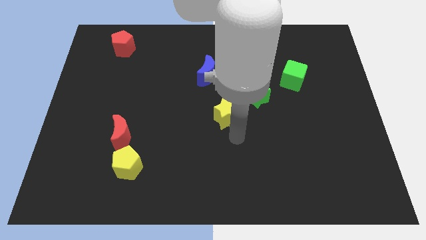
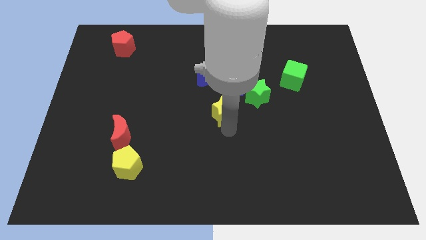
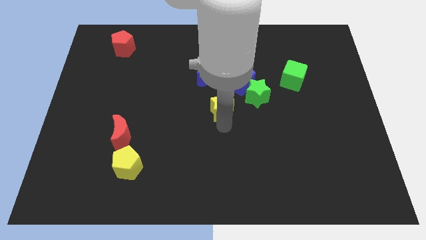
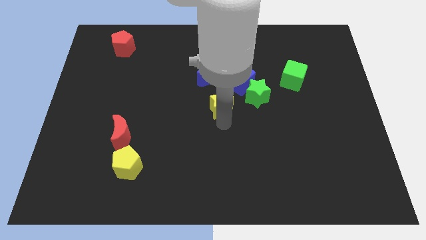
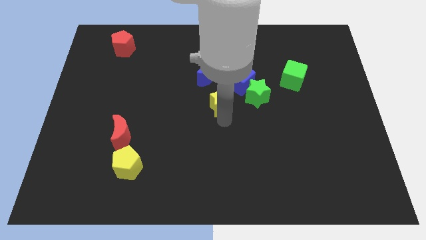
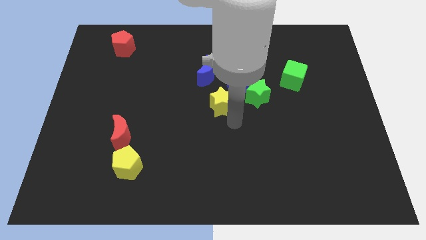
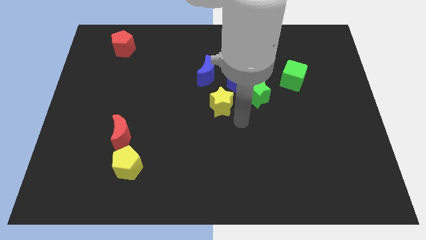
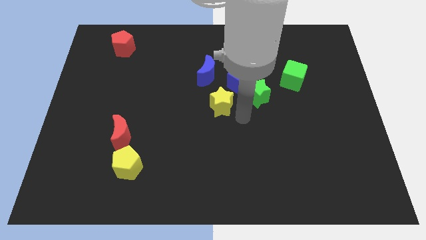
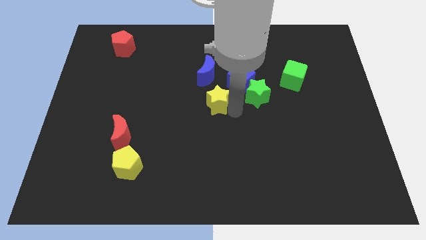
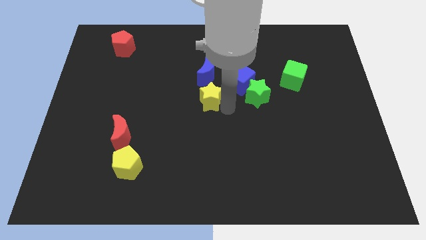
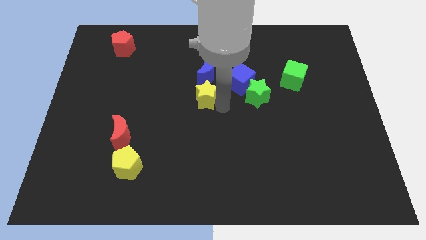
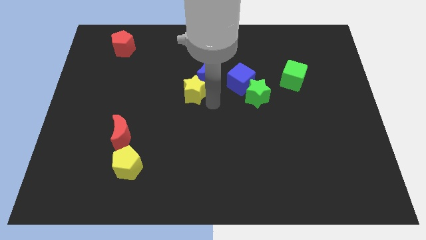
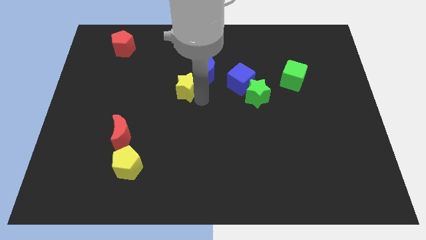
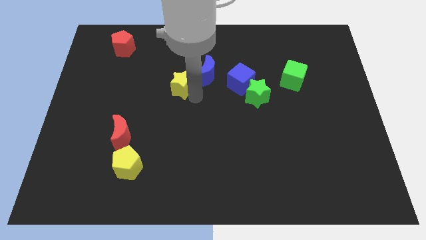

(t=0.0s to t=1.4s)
place the yellow star left to the blue moon

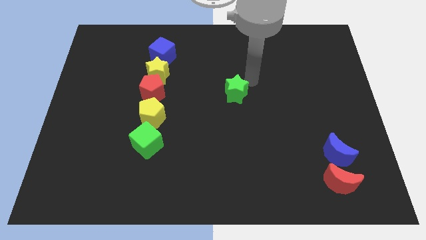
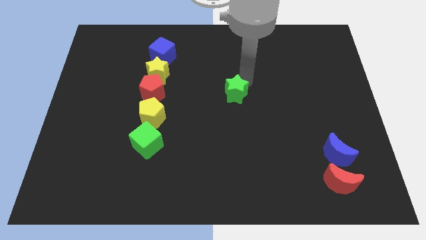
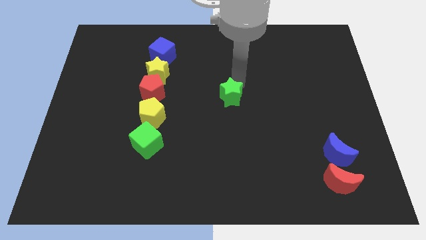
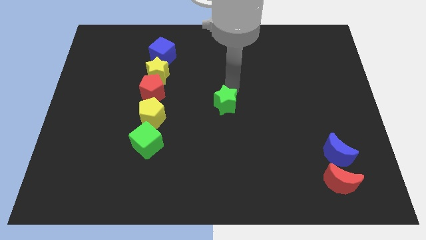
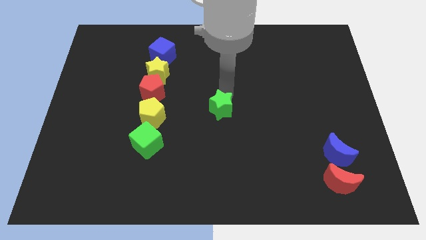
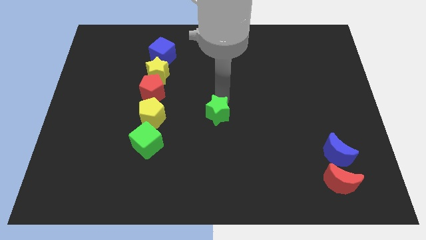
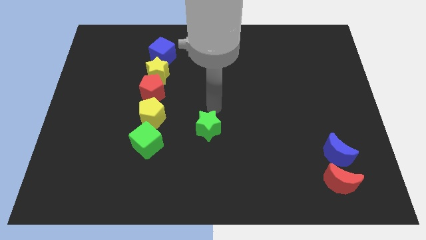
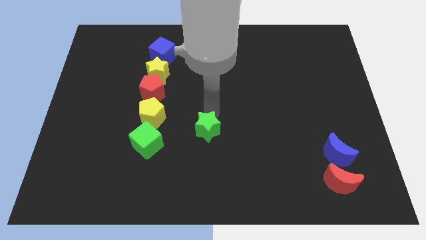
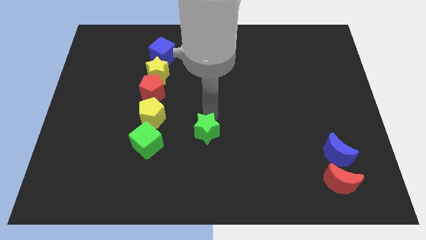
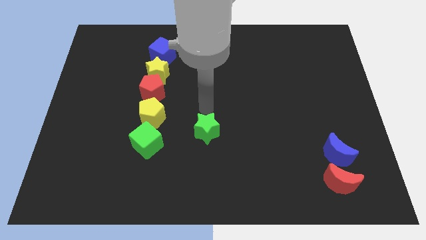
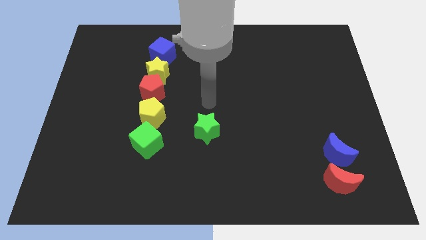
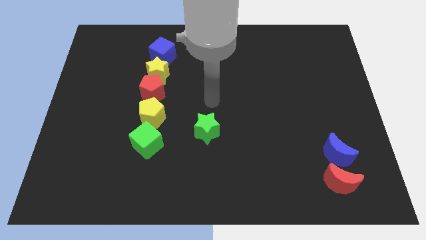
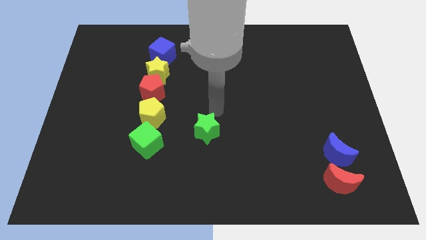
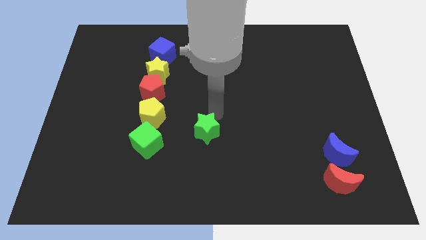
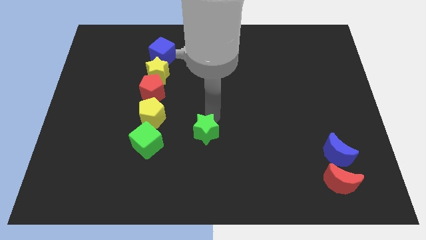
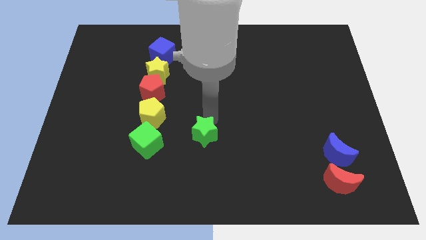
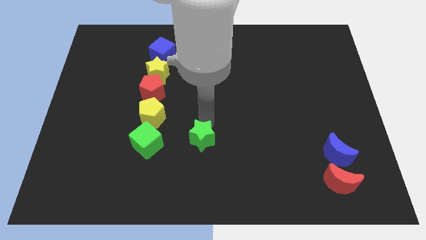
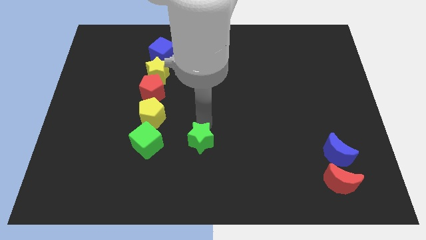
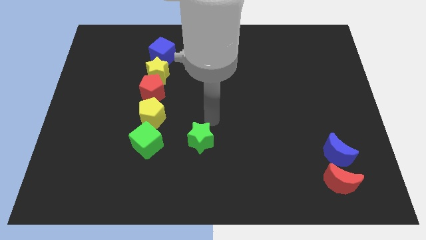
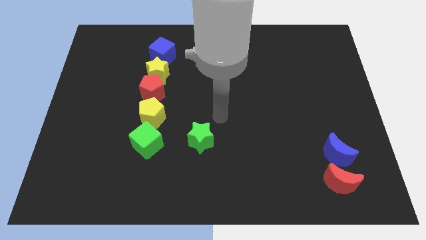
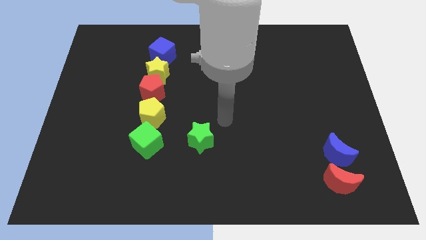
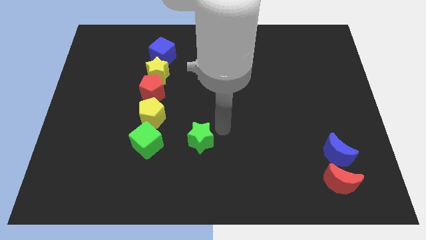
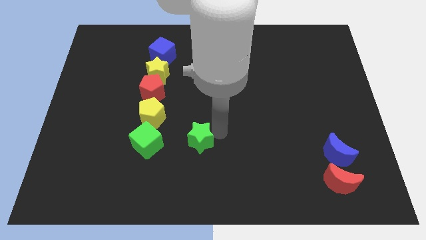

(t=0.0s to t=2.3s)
place the green star parallel to the green cube

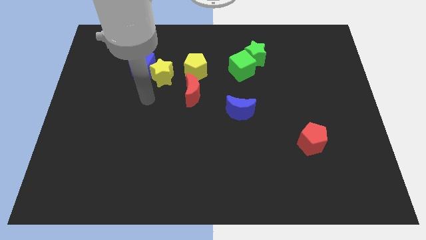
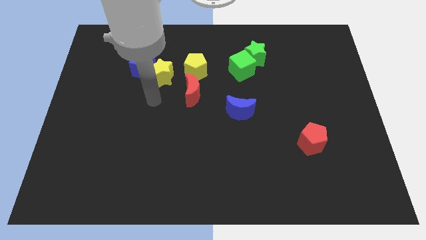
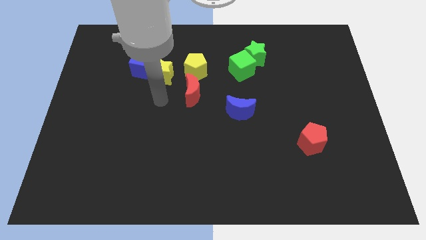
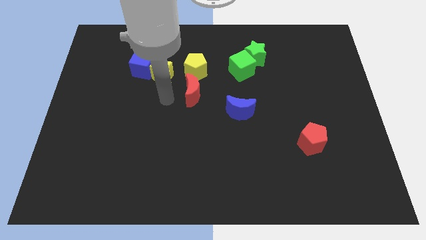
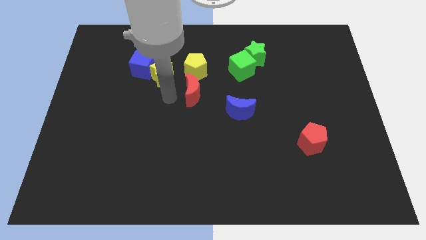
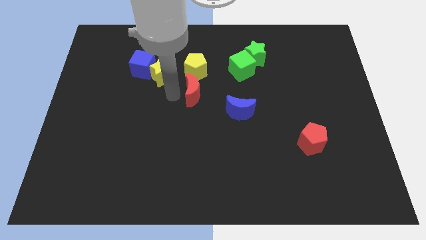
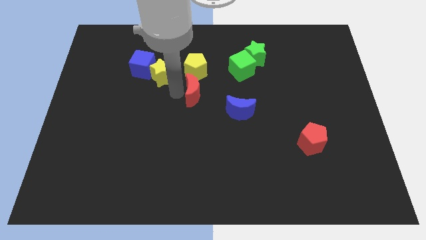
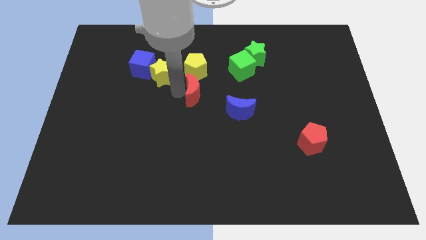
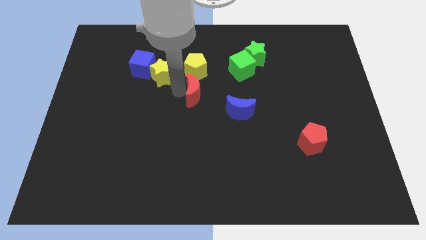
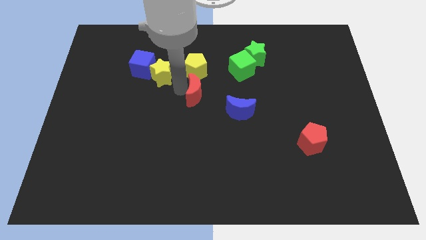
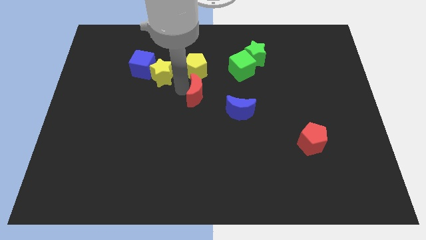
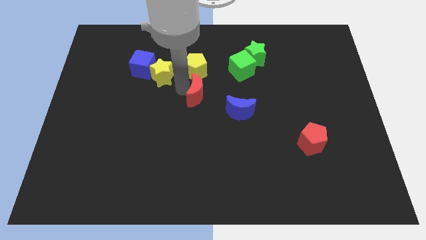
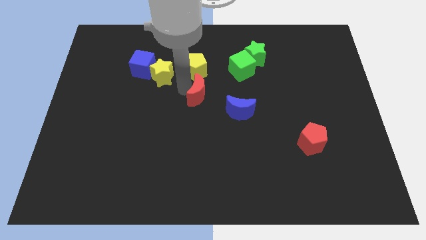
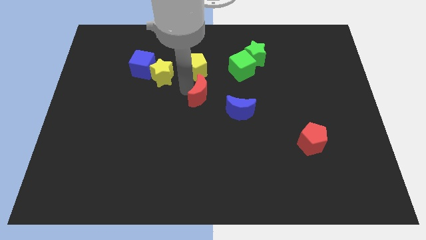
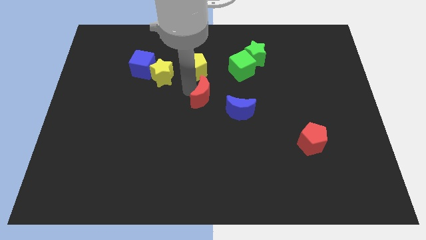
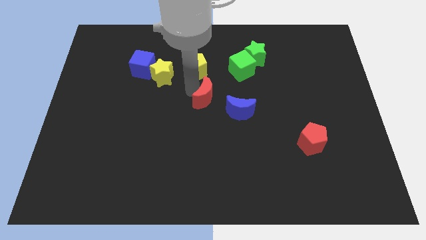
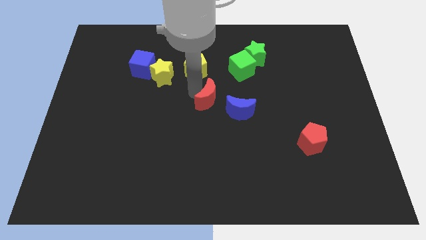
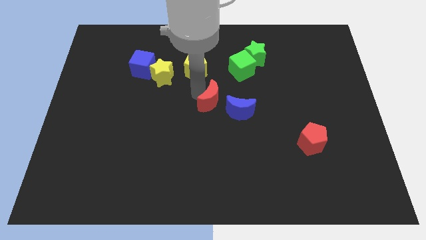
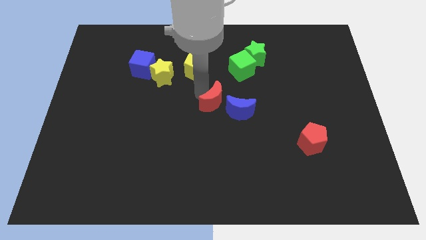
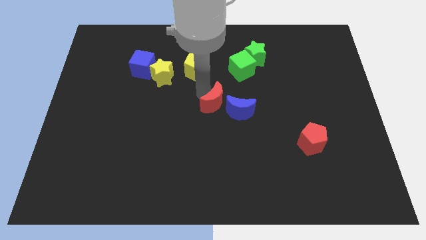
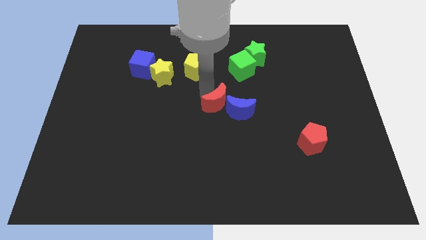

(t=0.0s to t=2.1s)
move the red crescent towards the left side of the blue moon

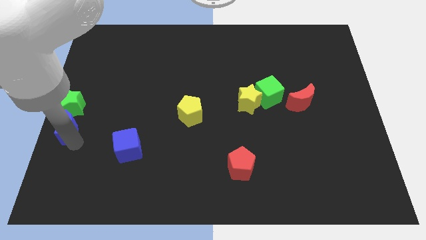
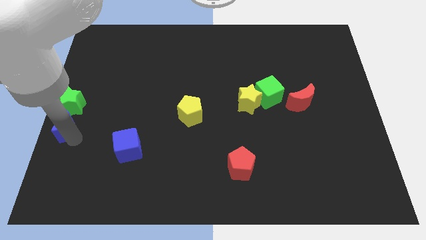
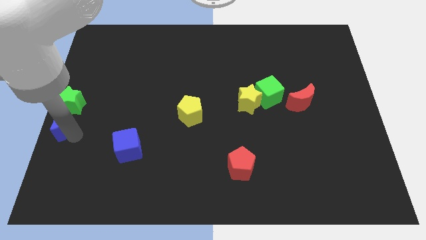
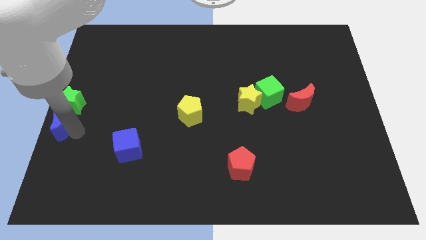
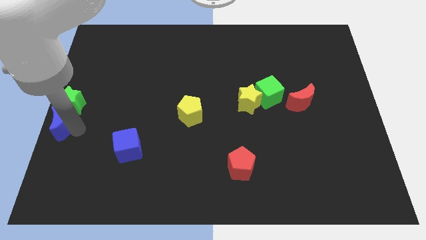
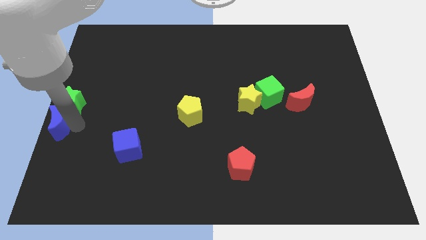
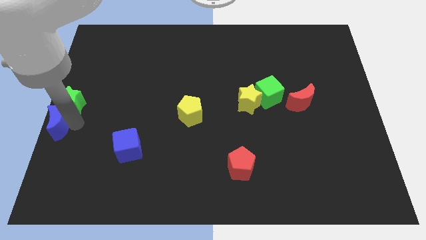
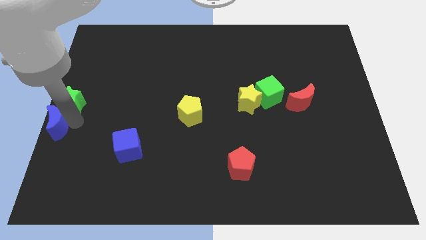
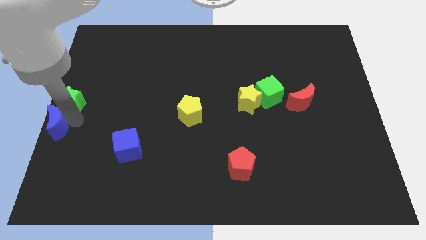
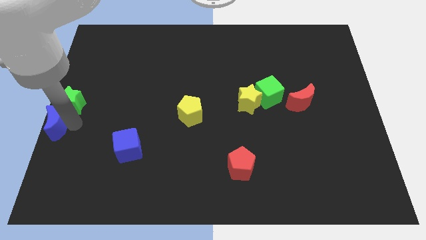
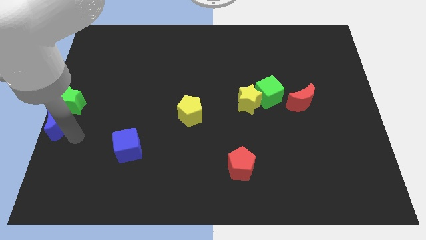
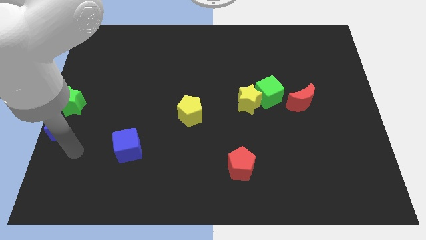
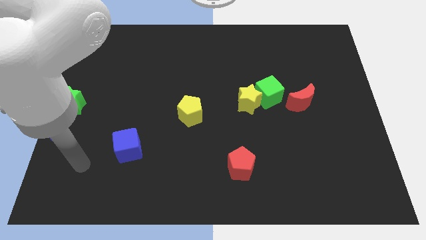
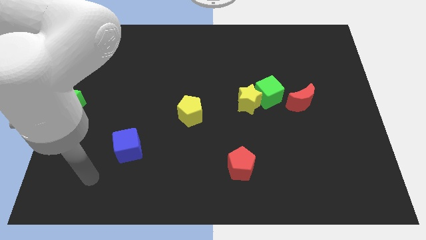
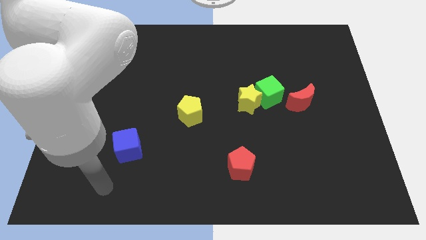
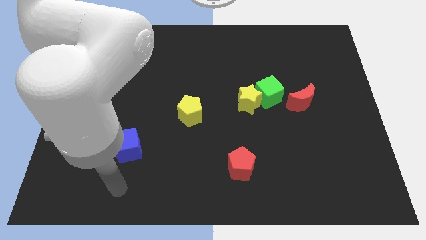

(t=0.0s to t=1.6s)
slide the blue moon to the left

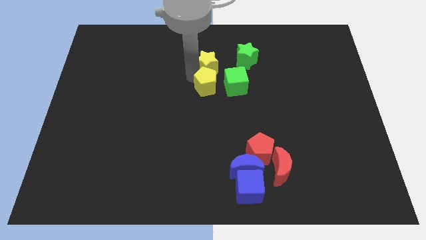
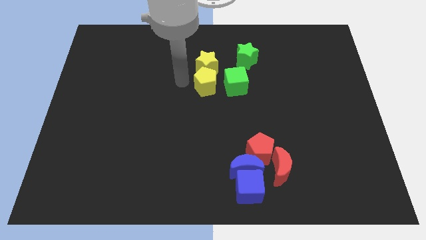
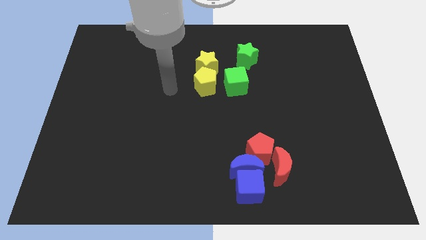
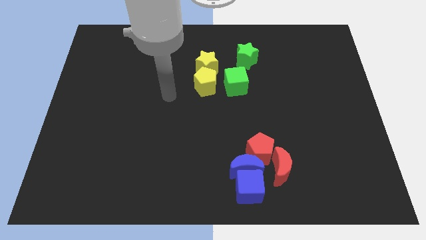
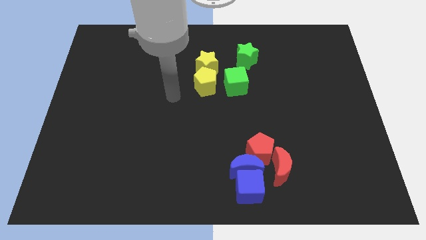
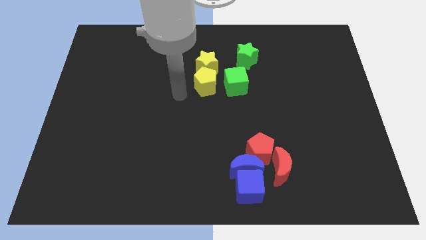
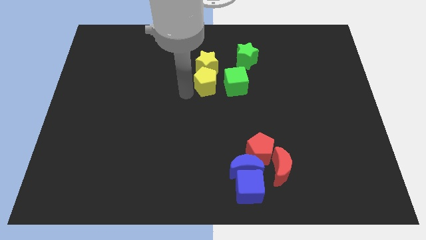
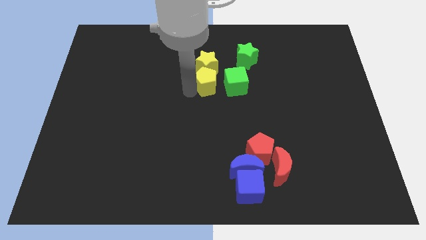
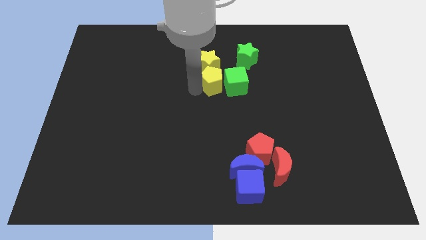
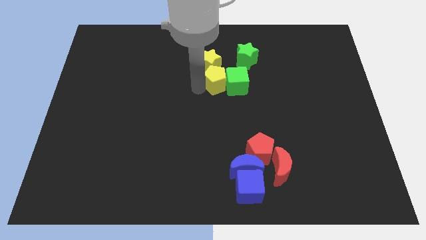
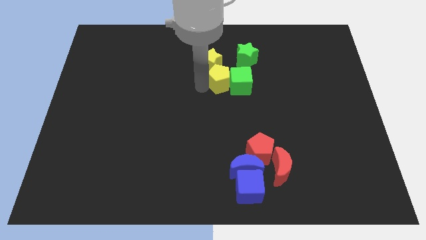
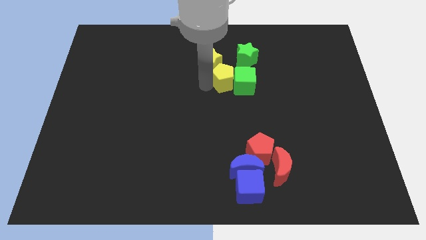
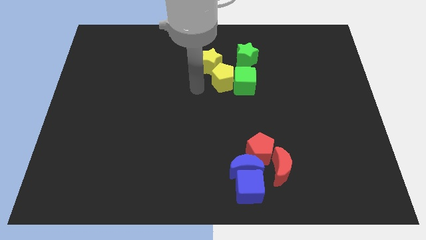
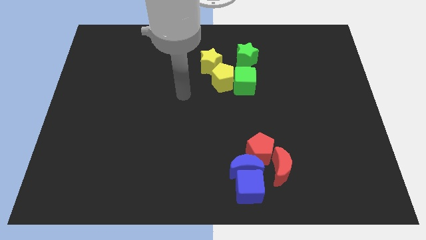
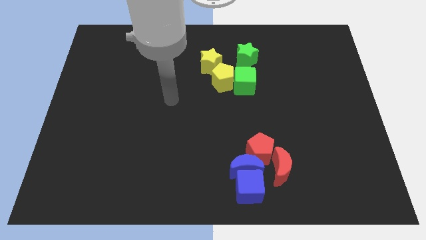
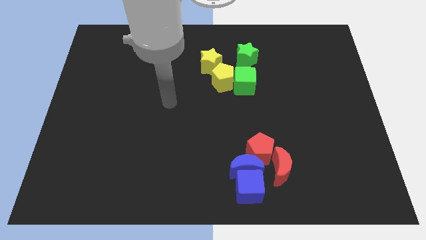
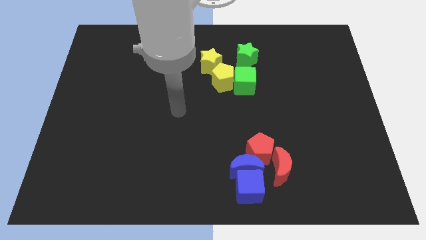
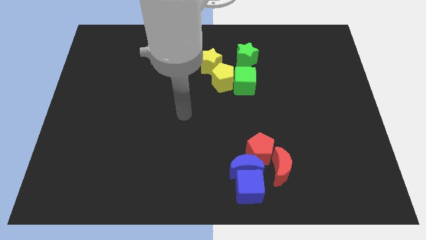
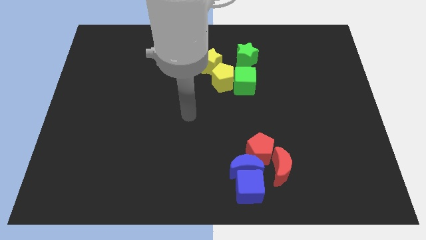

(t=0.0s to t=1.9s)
move the yellow pentagon diagonally on the bottom right side of the yellow star
